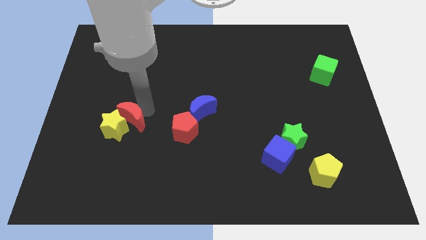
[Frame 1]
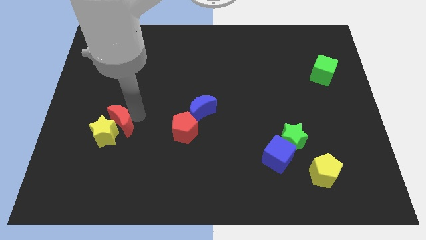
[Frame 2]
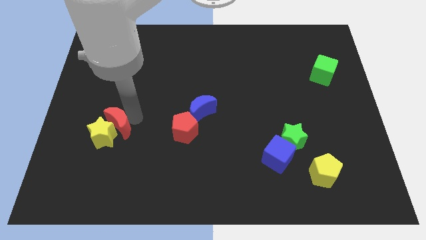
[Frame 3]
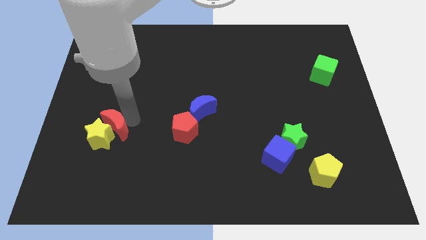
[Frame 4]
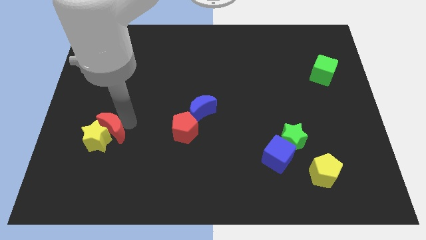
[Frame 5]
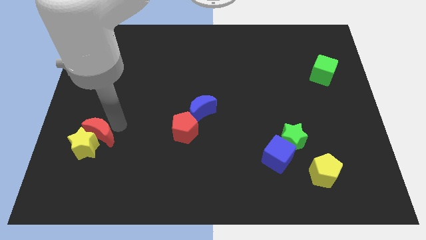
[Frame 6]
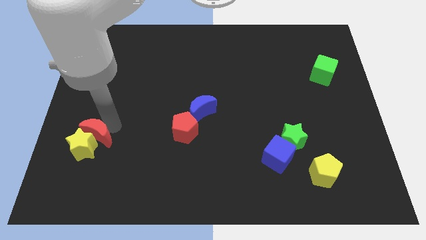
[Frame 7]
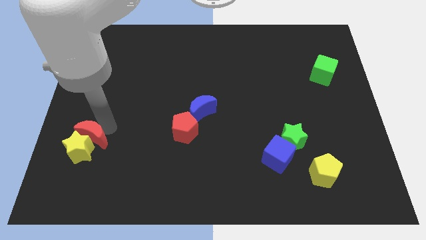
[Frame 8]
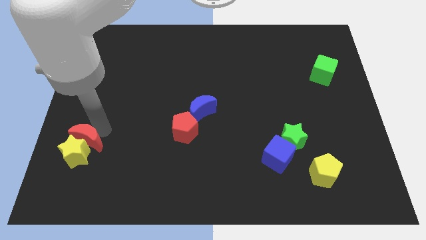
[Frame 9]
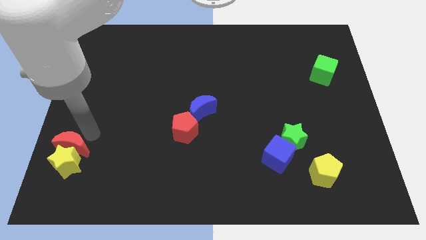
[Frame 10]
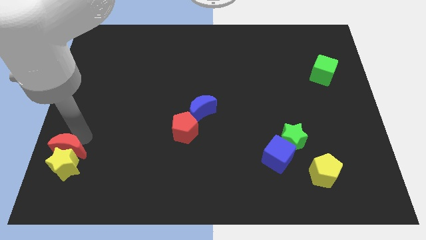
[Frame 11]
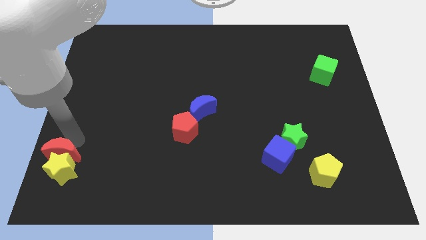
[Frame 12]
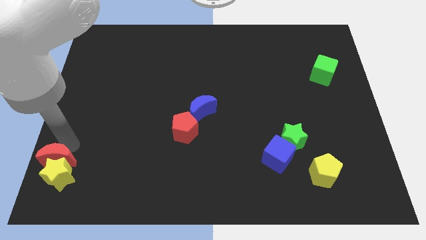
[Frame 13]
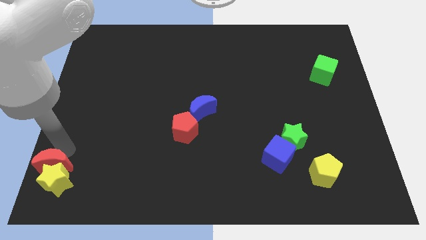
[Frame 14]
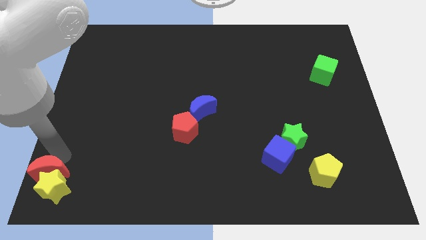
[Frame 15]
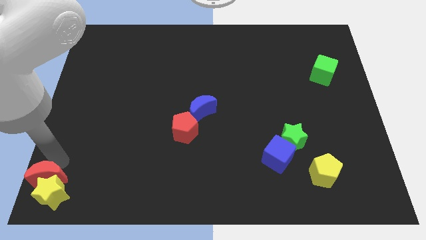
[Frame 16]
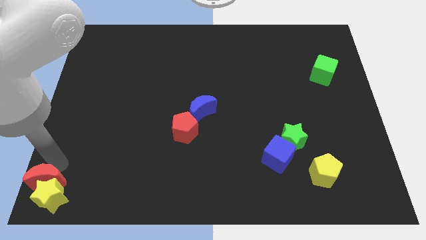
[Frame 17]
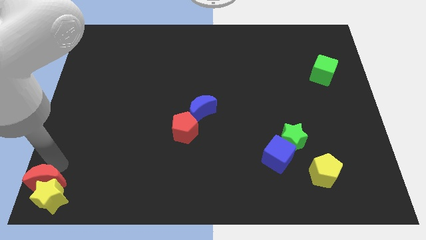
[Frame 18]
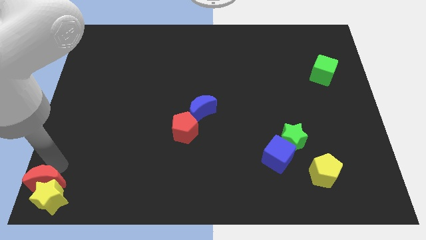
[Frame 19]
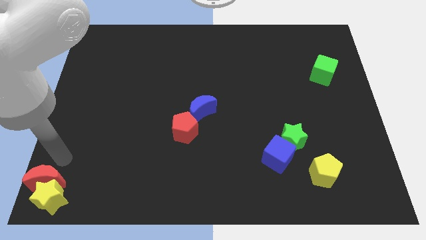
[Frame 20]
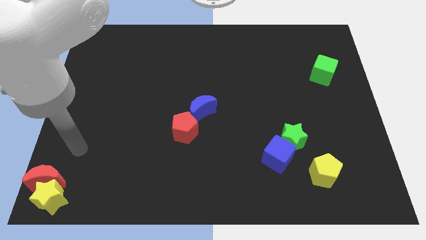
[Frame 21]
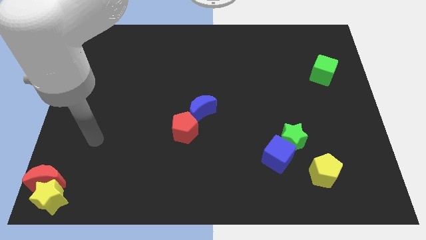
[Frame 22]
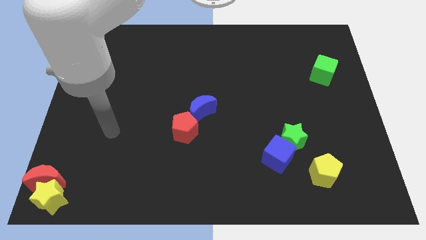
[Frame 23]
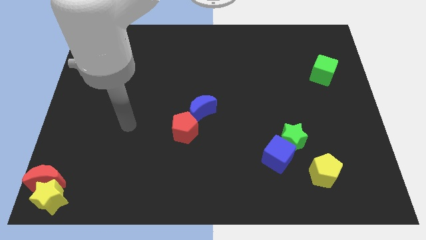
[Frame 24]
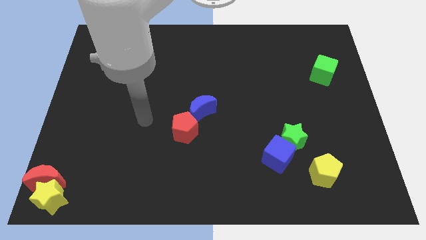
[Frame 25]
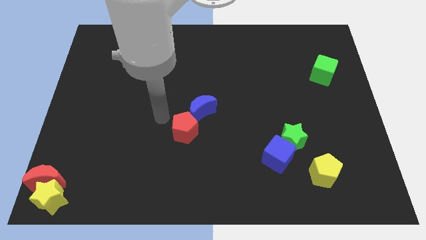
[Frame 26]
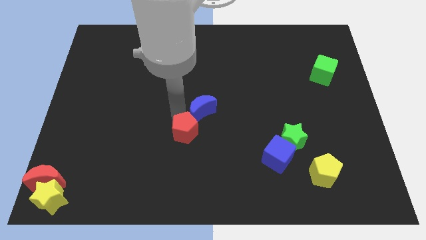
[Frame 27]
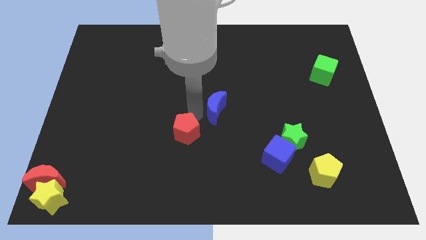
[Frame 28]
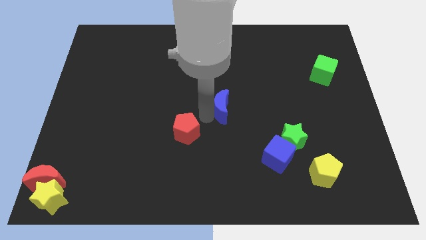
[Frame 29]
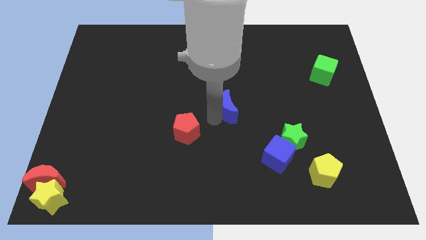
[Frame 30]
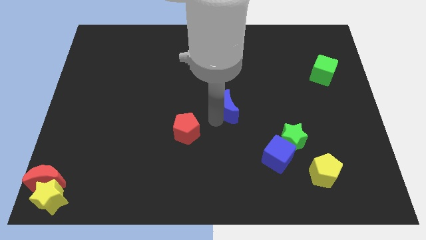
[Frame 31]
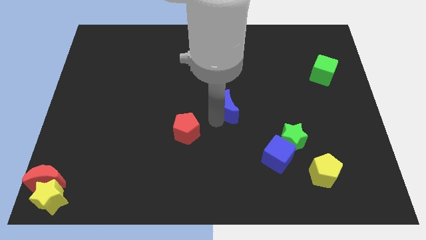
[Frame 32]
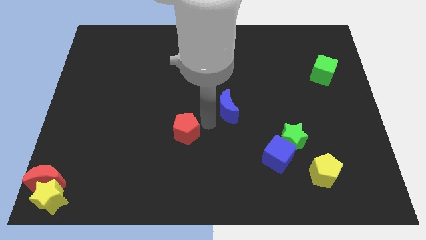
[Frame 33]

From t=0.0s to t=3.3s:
push the yellow star with a red moon to the bottom left of the board

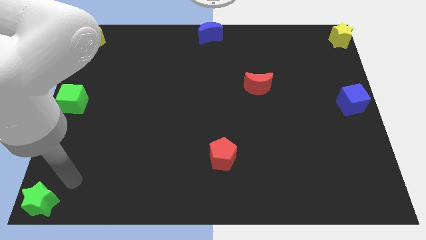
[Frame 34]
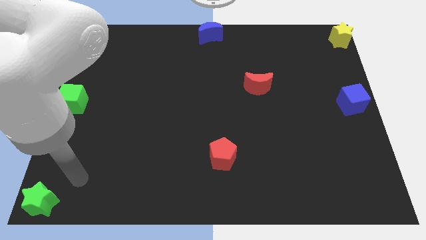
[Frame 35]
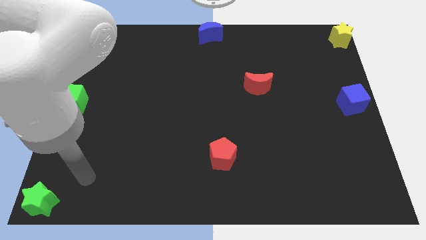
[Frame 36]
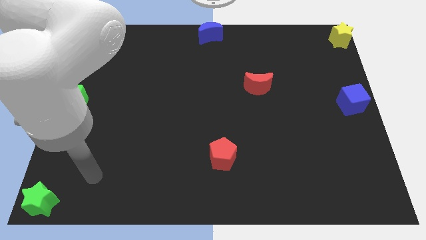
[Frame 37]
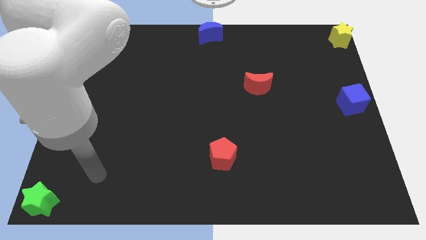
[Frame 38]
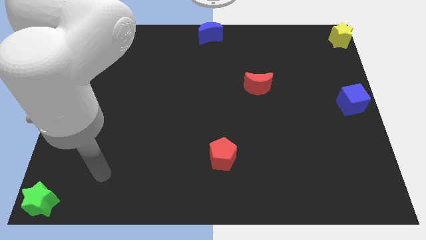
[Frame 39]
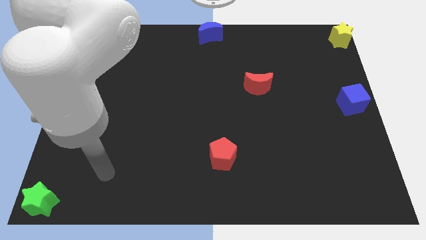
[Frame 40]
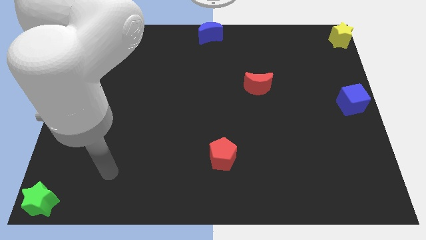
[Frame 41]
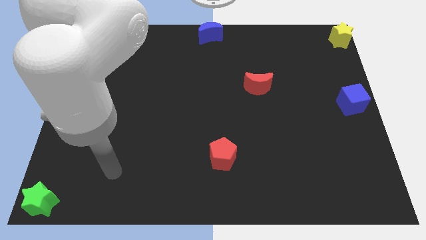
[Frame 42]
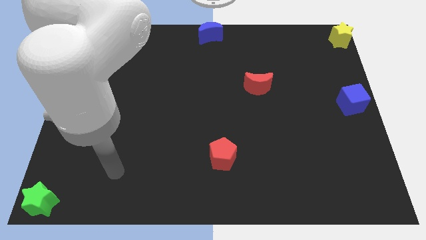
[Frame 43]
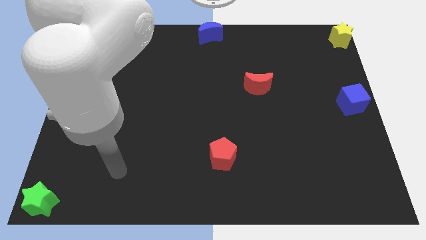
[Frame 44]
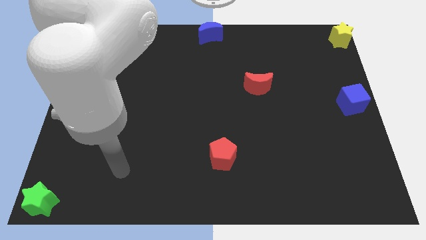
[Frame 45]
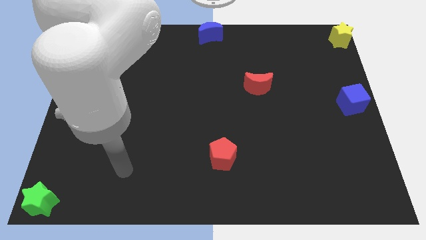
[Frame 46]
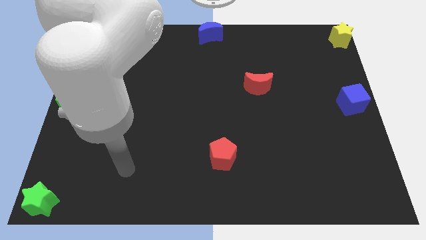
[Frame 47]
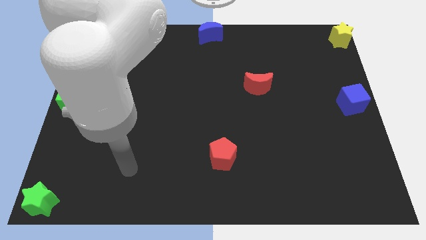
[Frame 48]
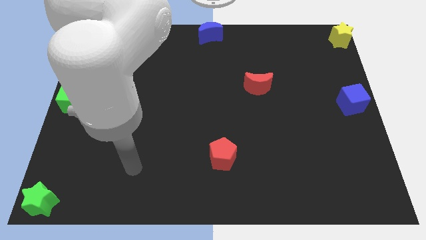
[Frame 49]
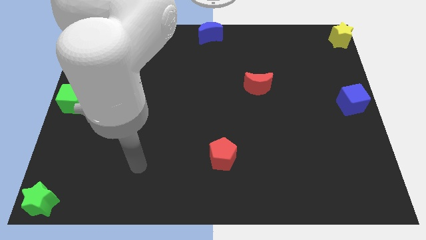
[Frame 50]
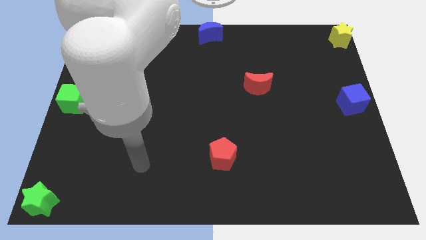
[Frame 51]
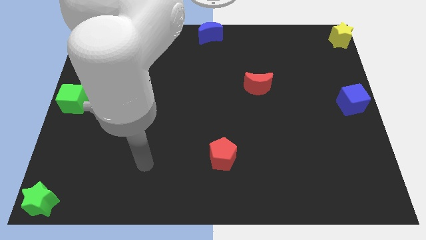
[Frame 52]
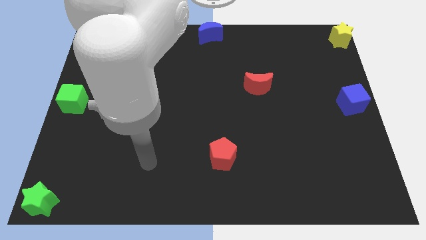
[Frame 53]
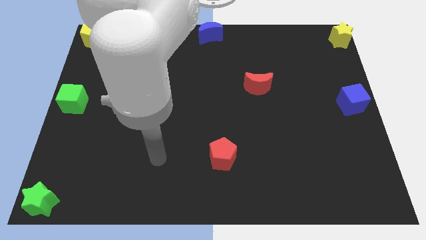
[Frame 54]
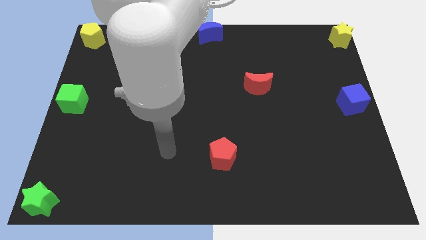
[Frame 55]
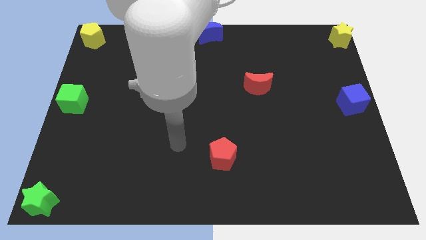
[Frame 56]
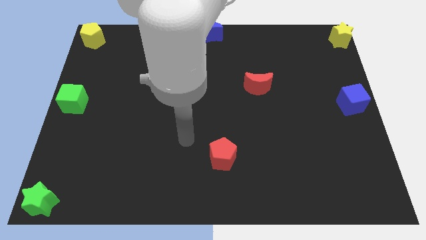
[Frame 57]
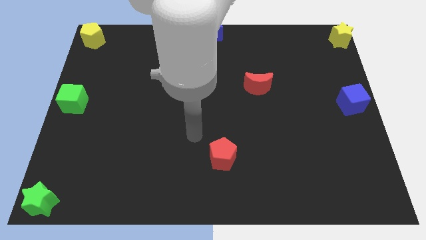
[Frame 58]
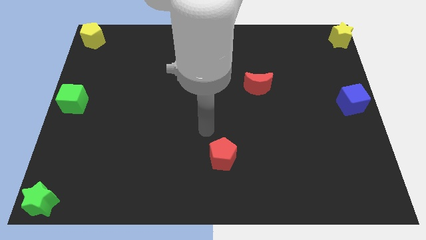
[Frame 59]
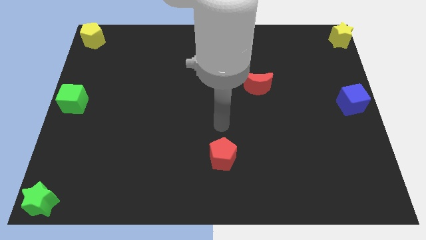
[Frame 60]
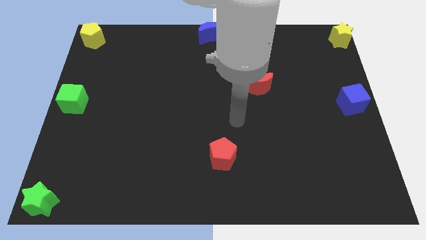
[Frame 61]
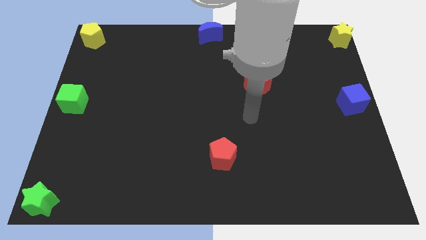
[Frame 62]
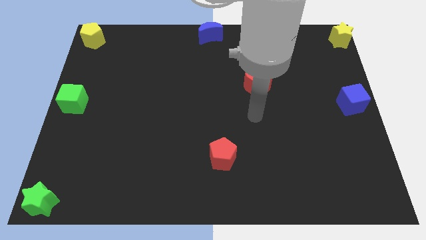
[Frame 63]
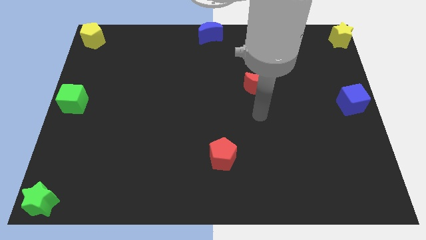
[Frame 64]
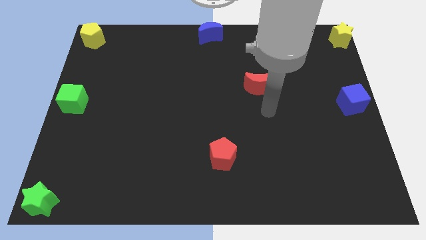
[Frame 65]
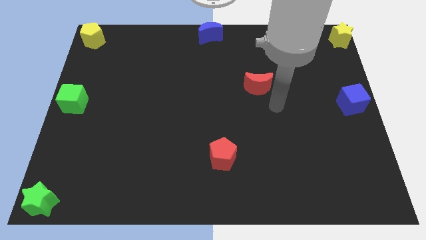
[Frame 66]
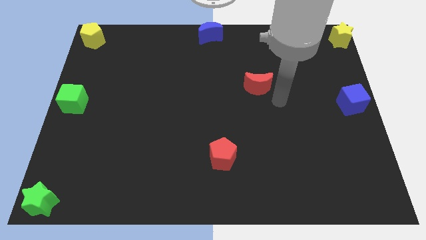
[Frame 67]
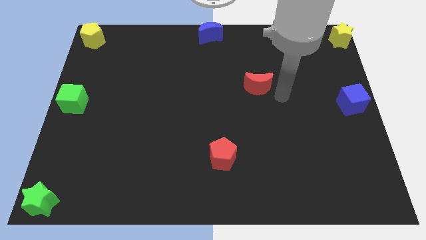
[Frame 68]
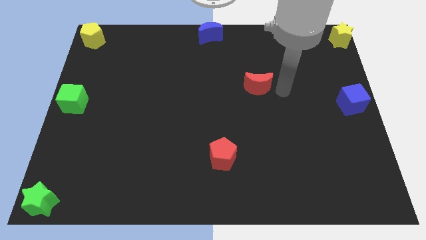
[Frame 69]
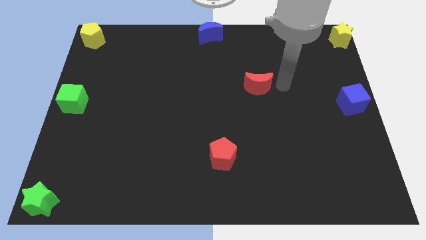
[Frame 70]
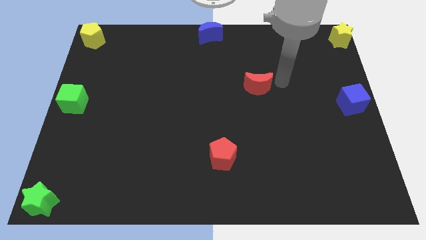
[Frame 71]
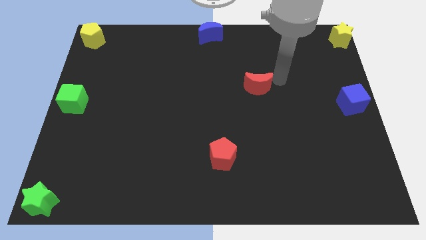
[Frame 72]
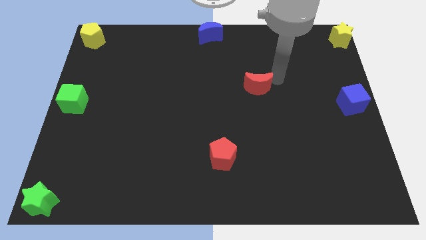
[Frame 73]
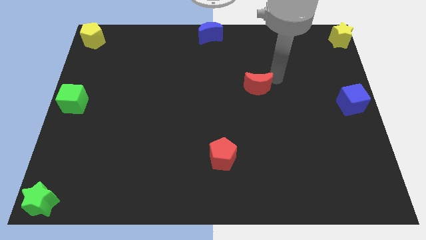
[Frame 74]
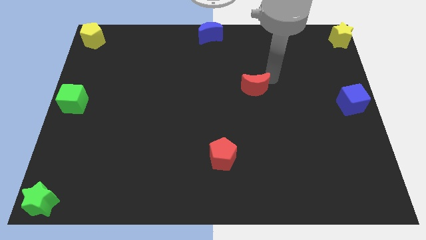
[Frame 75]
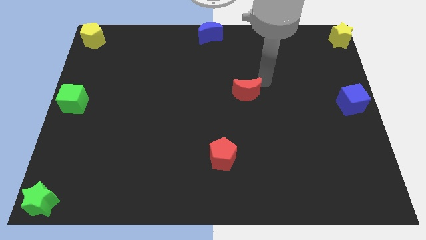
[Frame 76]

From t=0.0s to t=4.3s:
move your hand towards the red crescent

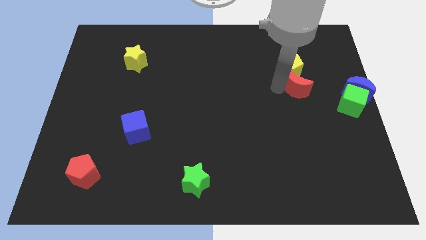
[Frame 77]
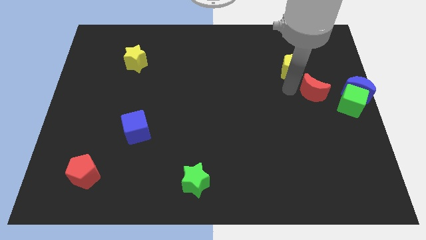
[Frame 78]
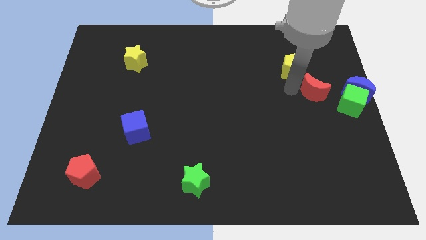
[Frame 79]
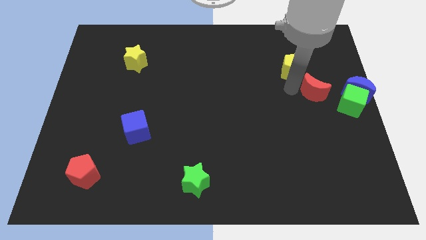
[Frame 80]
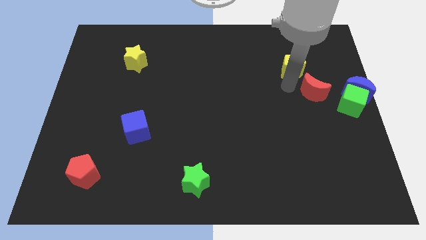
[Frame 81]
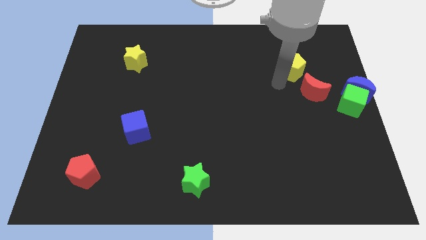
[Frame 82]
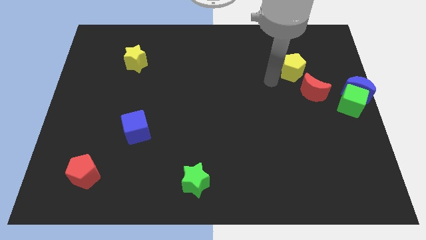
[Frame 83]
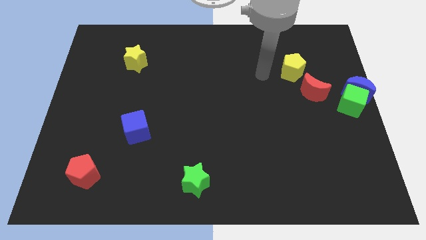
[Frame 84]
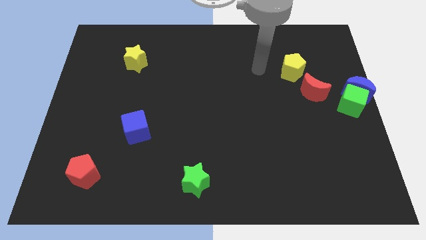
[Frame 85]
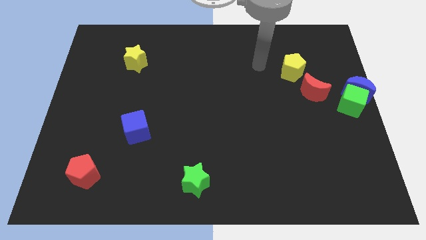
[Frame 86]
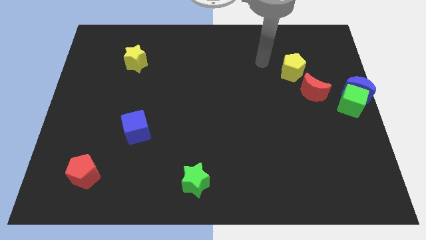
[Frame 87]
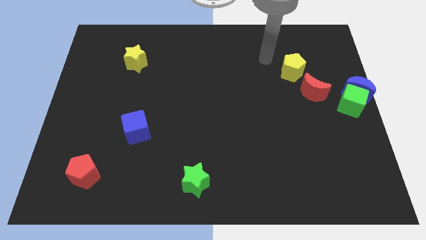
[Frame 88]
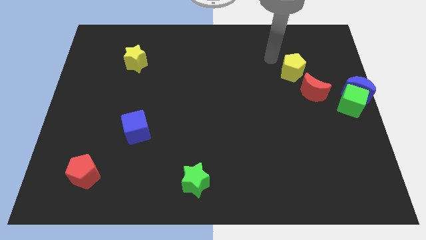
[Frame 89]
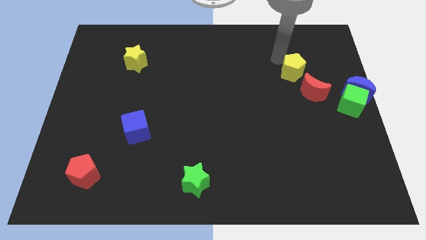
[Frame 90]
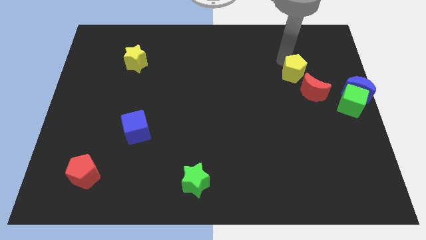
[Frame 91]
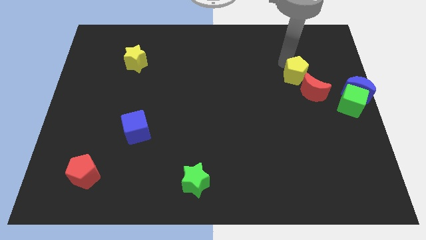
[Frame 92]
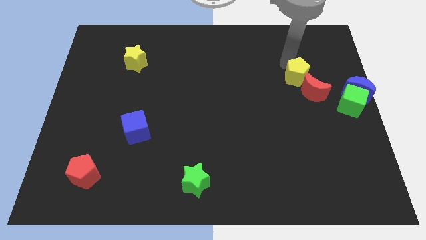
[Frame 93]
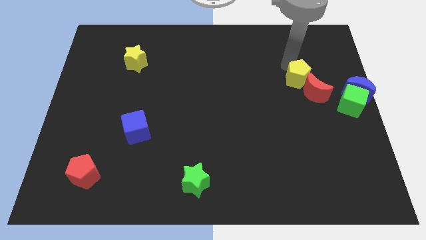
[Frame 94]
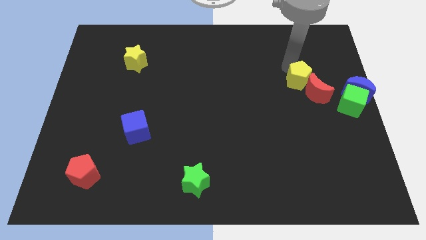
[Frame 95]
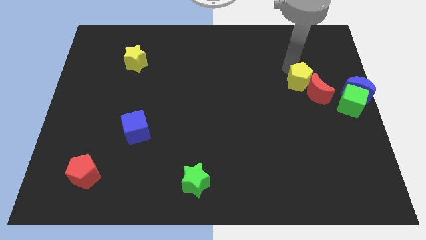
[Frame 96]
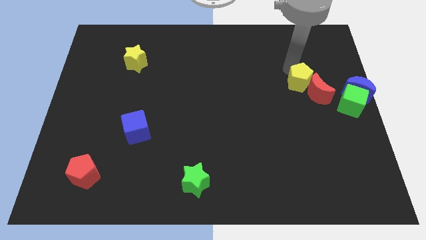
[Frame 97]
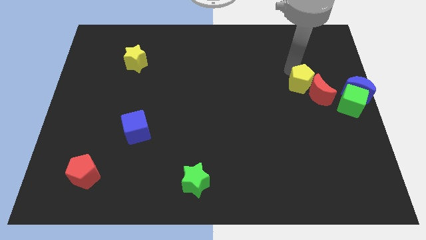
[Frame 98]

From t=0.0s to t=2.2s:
place the yellow pentagon to top right of red crescent
